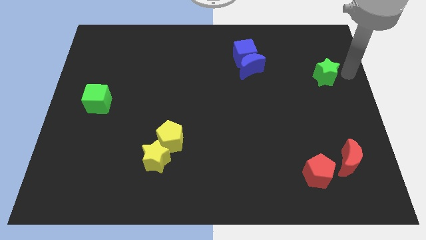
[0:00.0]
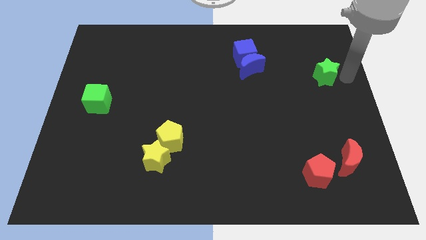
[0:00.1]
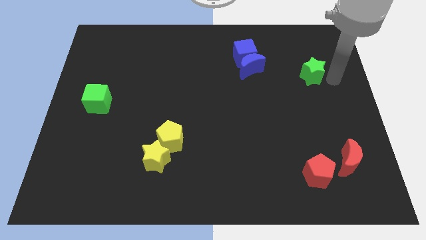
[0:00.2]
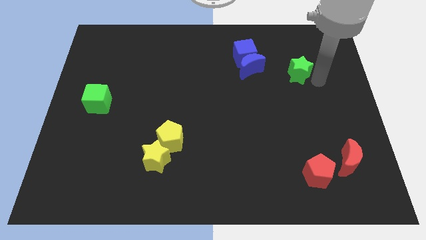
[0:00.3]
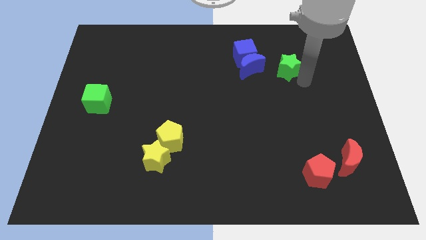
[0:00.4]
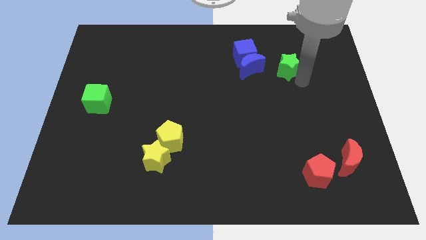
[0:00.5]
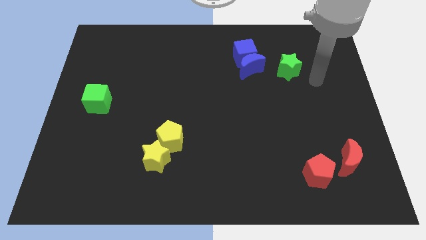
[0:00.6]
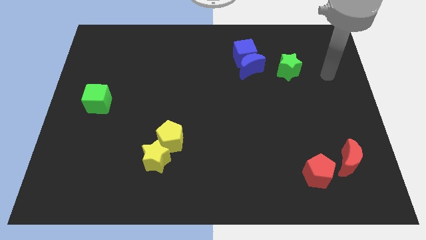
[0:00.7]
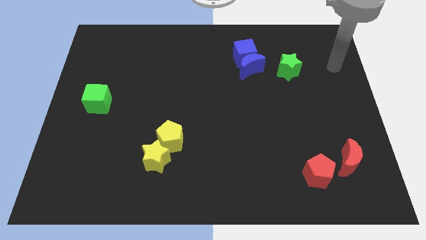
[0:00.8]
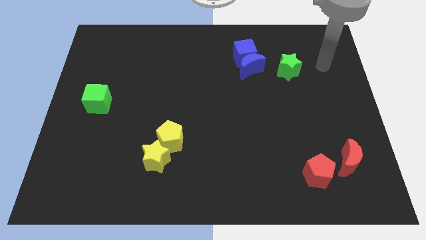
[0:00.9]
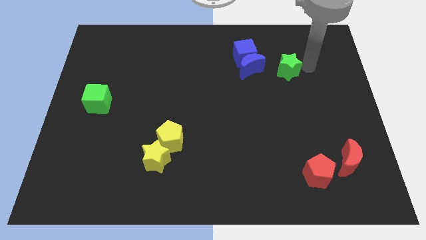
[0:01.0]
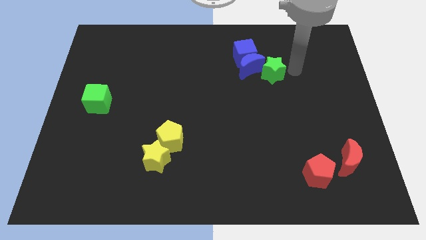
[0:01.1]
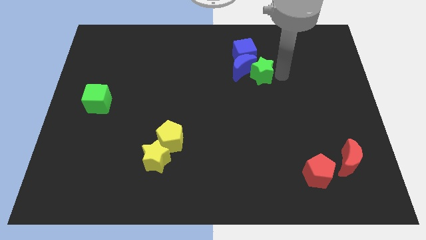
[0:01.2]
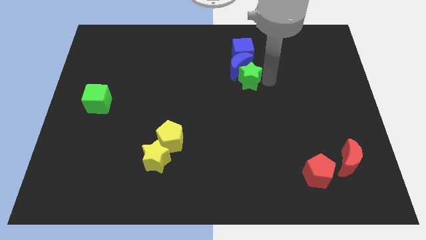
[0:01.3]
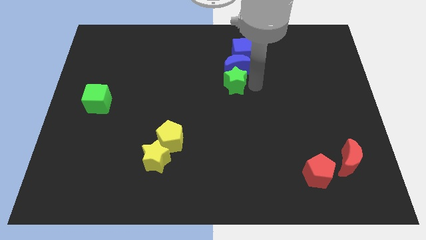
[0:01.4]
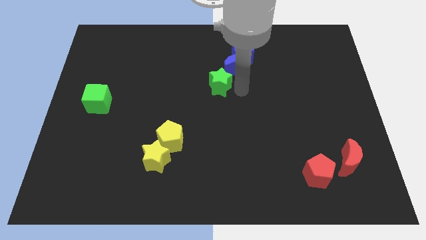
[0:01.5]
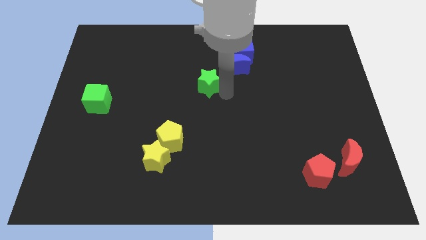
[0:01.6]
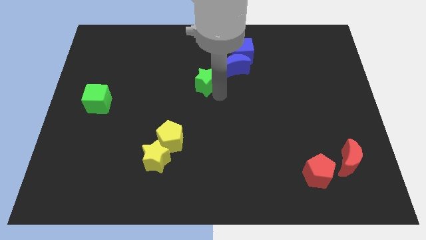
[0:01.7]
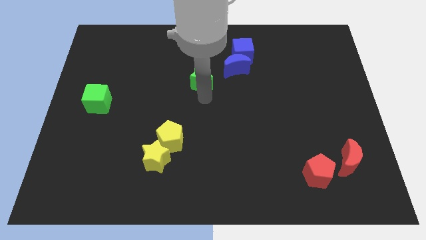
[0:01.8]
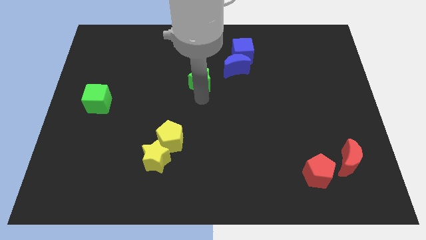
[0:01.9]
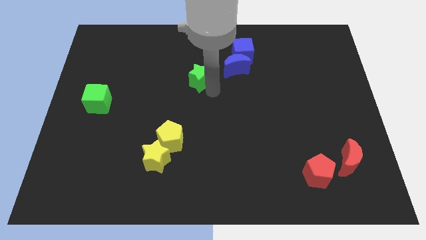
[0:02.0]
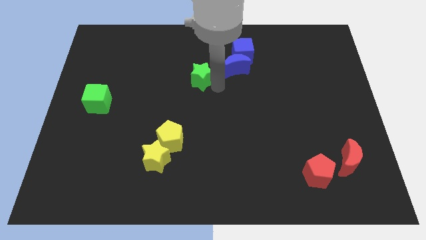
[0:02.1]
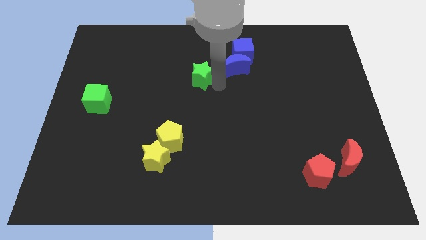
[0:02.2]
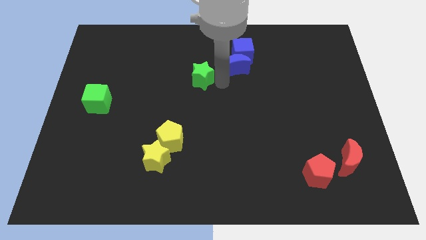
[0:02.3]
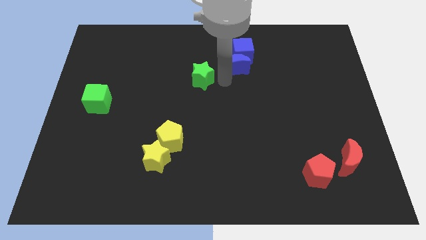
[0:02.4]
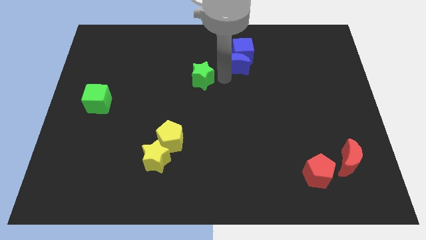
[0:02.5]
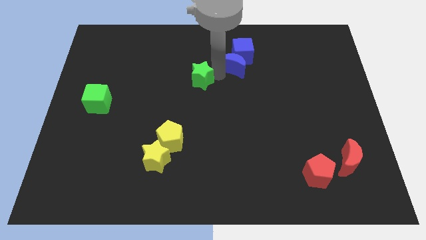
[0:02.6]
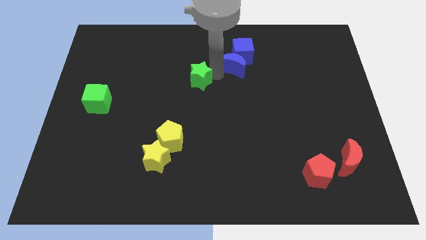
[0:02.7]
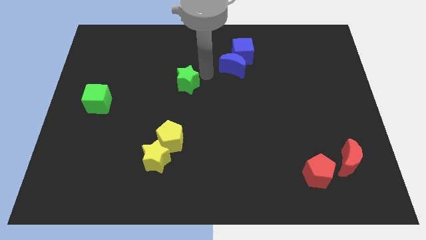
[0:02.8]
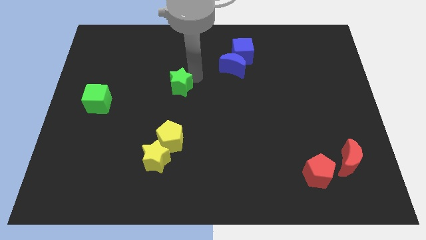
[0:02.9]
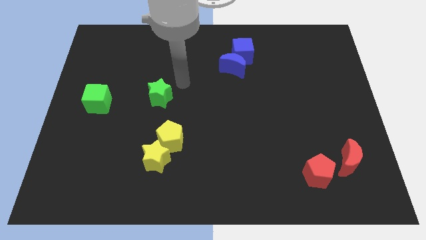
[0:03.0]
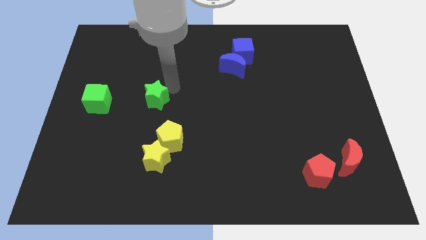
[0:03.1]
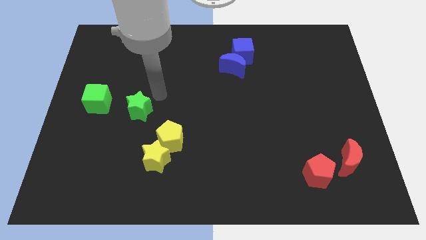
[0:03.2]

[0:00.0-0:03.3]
push the green star horizontally to the right side of the green cube

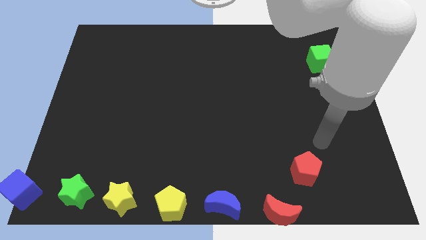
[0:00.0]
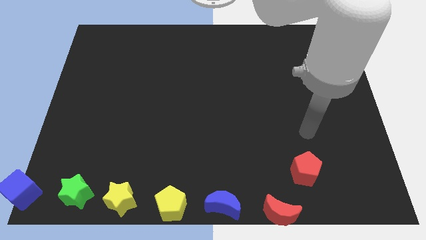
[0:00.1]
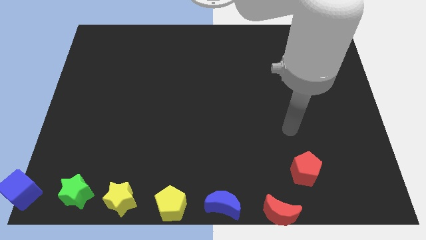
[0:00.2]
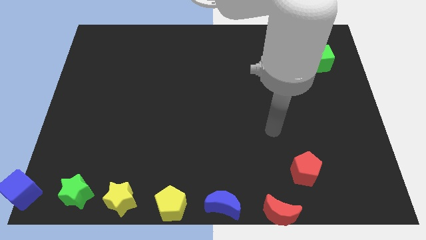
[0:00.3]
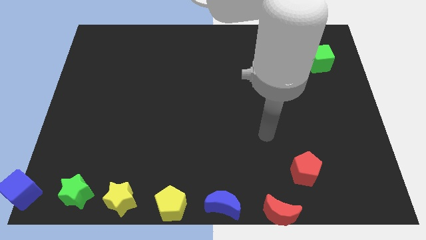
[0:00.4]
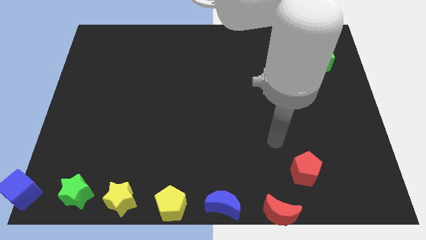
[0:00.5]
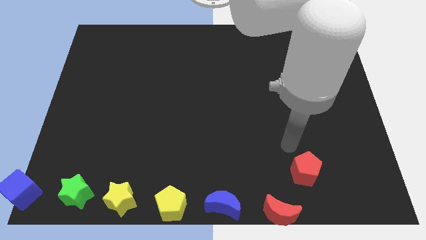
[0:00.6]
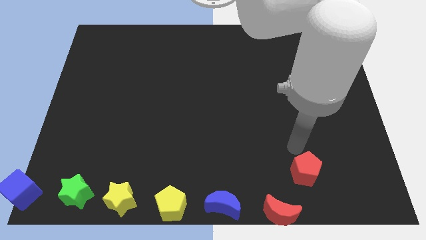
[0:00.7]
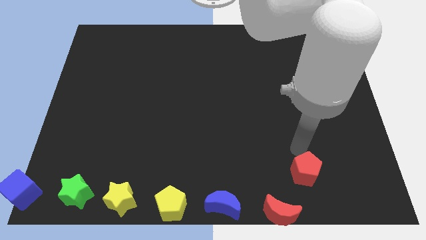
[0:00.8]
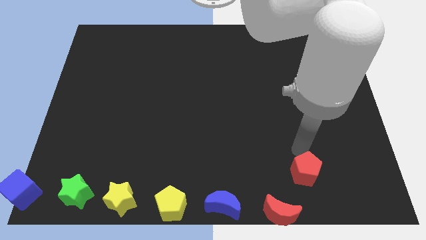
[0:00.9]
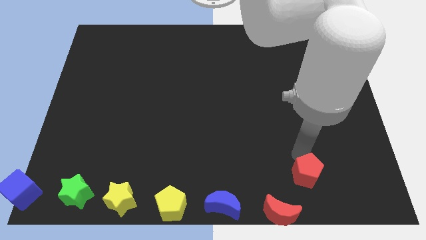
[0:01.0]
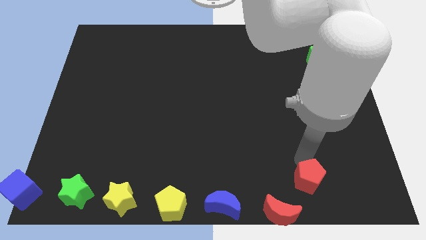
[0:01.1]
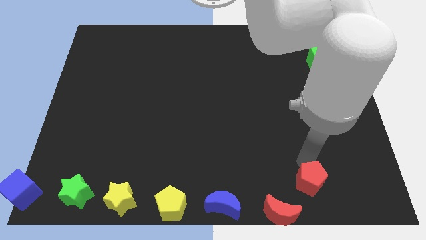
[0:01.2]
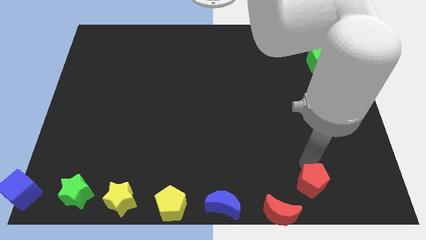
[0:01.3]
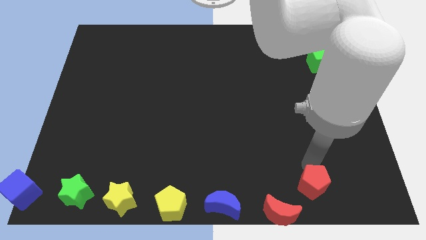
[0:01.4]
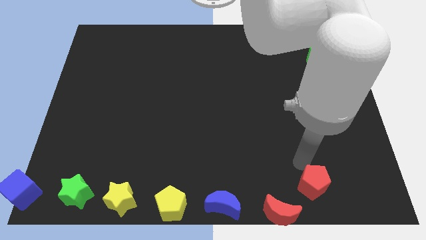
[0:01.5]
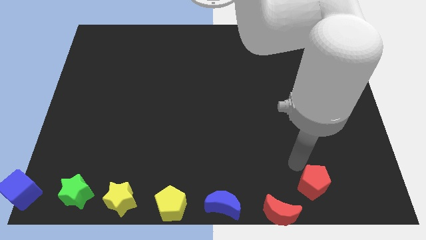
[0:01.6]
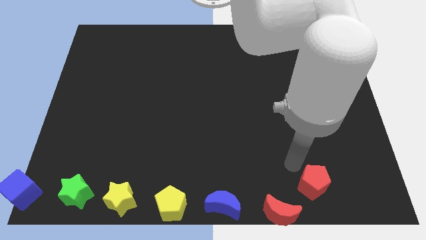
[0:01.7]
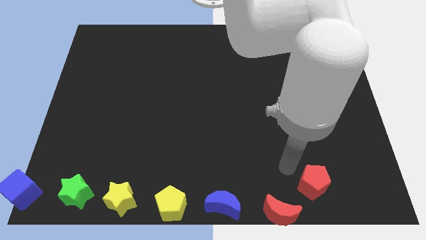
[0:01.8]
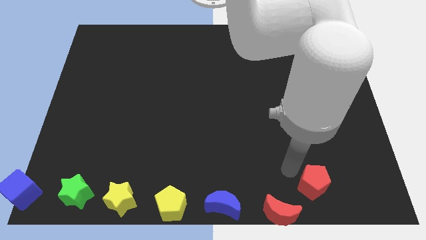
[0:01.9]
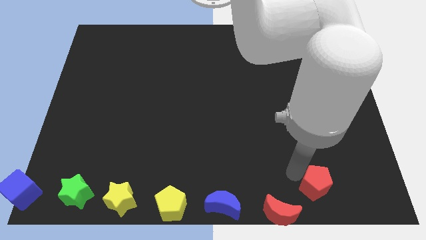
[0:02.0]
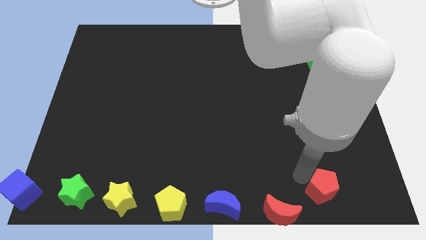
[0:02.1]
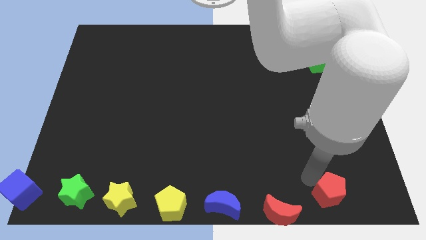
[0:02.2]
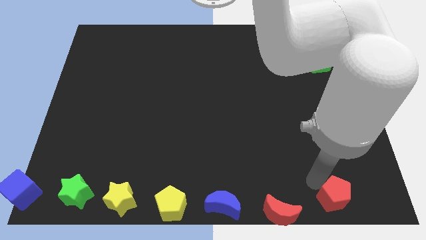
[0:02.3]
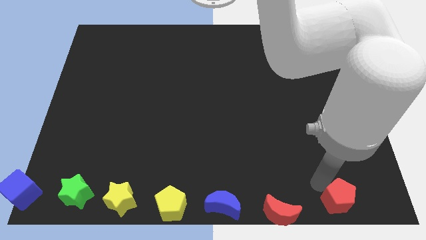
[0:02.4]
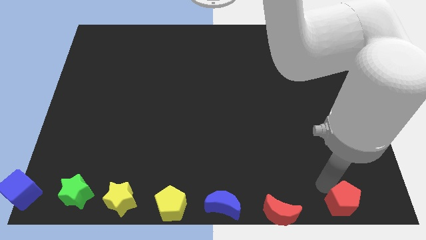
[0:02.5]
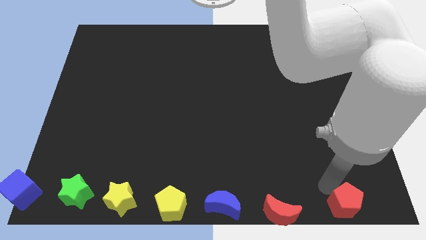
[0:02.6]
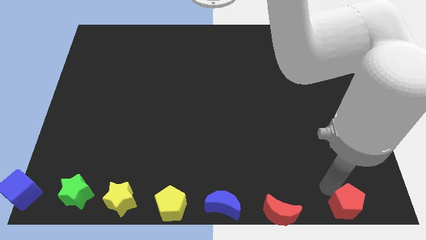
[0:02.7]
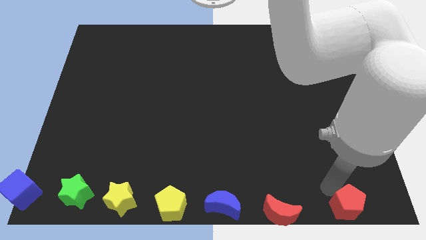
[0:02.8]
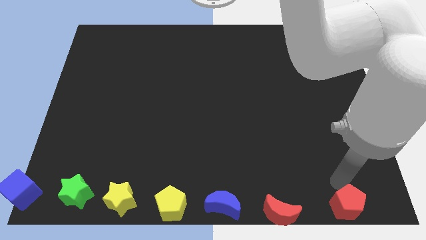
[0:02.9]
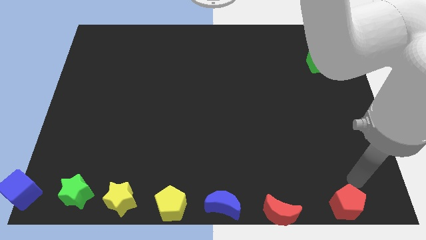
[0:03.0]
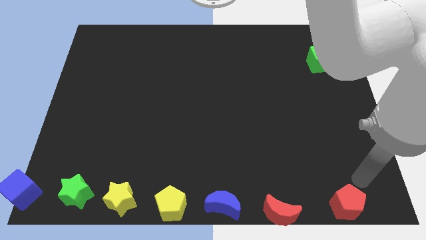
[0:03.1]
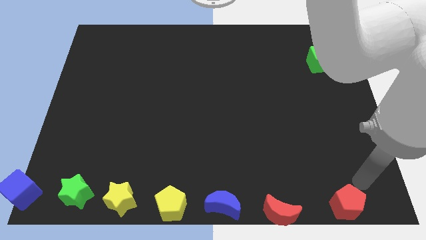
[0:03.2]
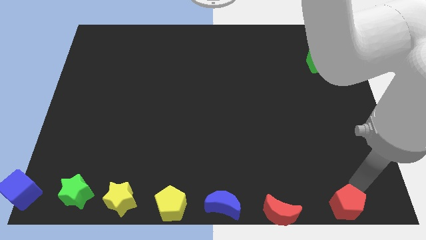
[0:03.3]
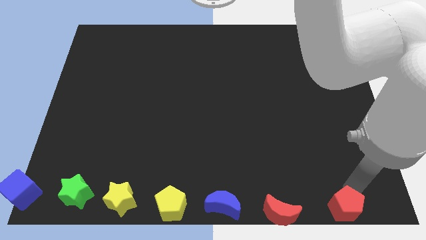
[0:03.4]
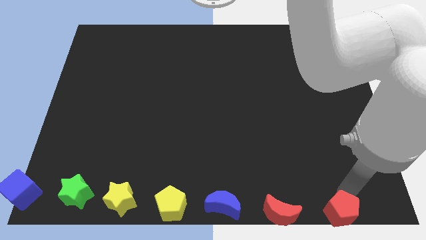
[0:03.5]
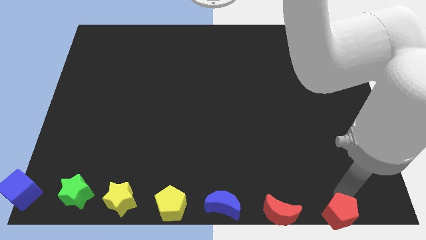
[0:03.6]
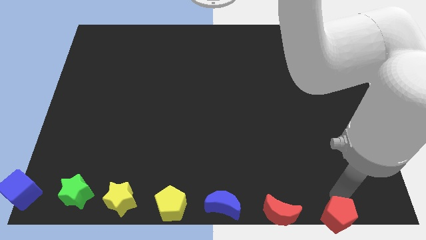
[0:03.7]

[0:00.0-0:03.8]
push the red pentagon to the right side of the diagonal line of blocks

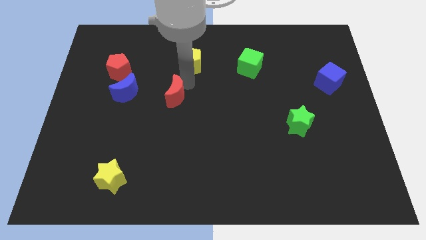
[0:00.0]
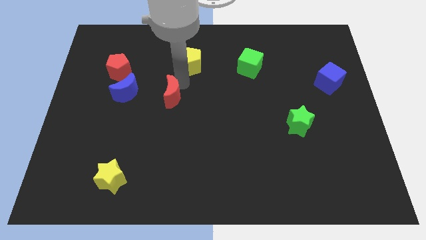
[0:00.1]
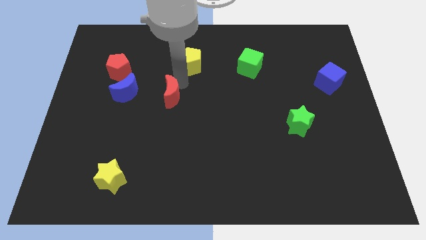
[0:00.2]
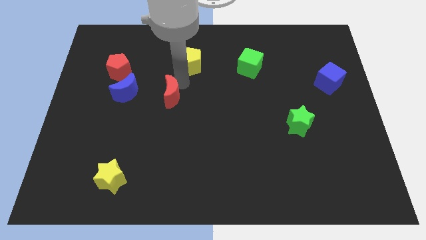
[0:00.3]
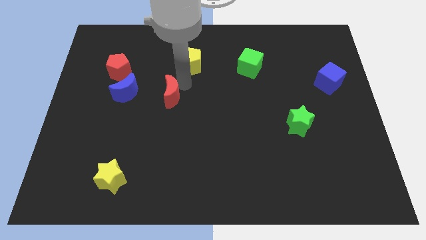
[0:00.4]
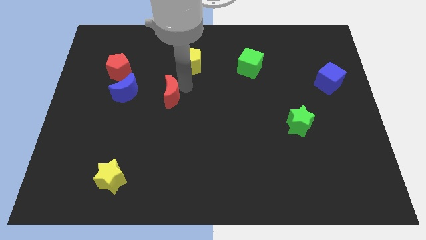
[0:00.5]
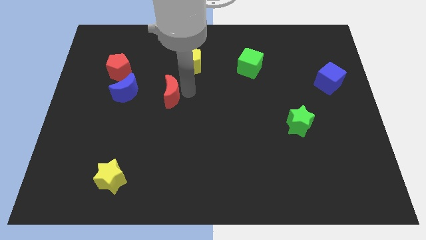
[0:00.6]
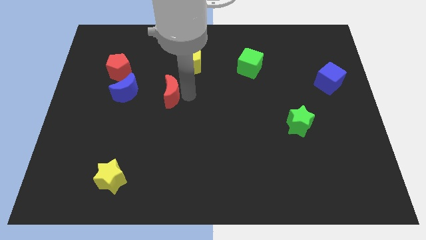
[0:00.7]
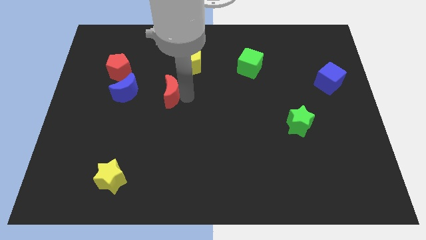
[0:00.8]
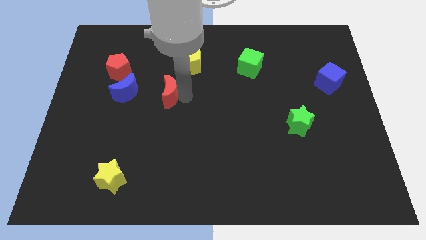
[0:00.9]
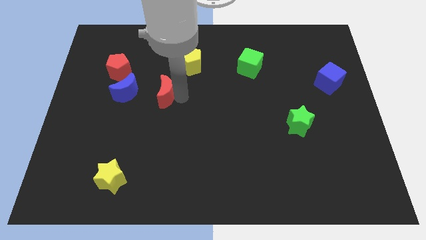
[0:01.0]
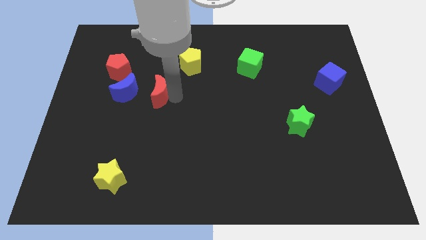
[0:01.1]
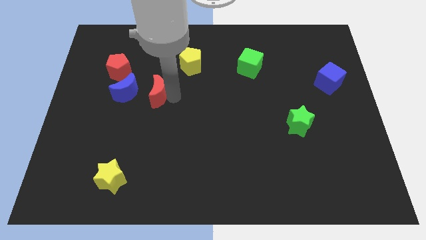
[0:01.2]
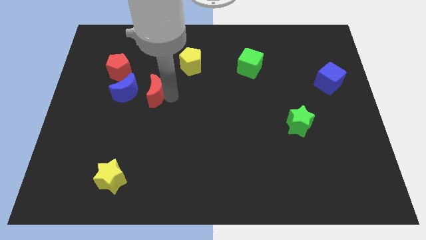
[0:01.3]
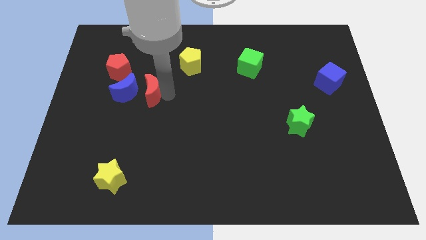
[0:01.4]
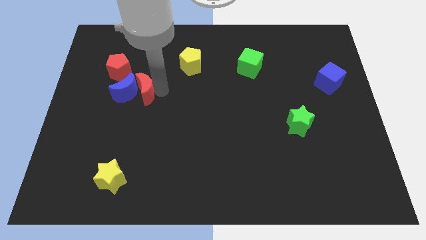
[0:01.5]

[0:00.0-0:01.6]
move the red crescent towards blue crescent

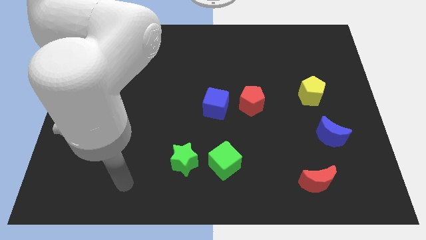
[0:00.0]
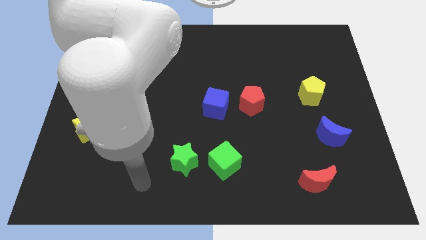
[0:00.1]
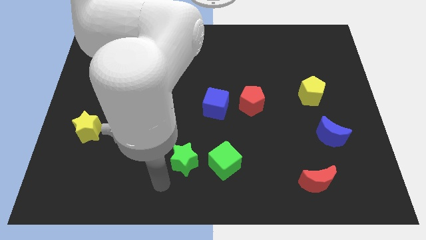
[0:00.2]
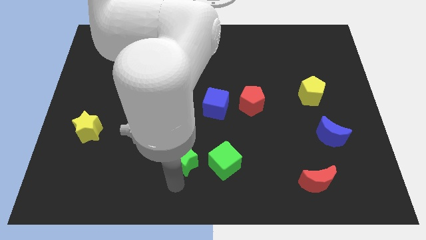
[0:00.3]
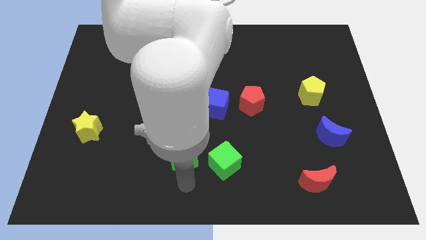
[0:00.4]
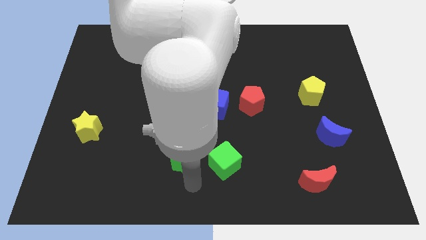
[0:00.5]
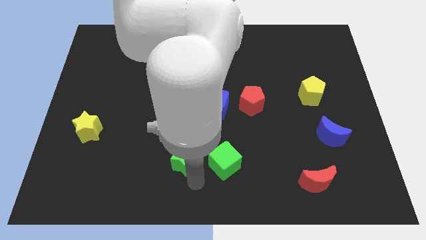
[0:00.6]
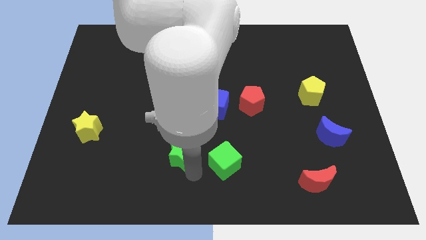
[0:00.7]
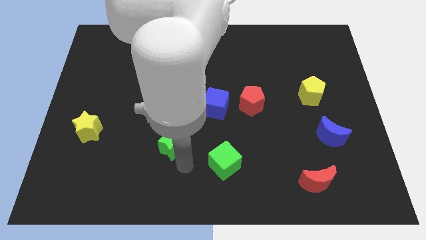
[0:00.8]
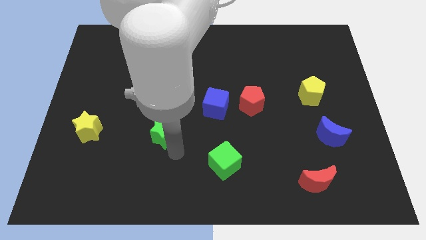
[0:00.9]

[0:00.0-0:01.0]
place the green star parallel to yellow star
